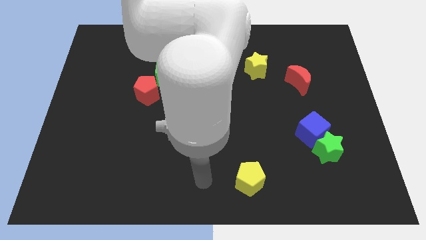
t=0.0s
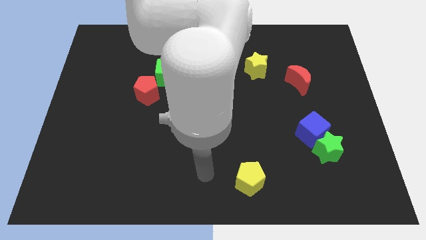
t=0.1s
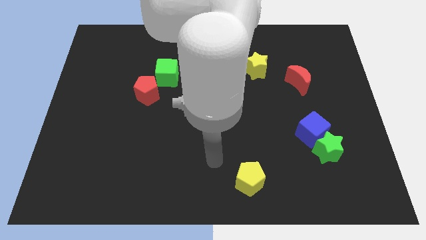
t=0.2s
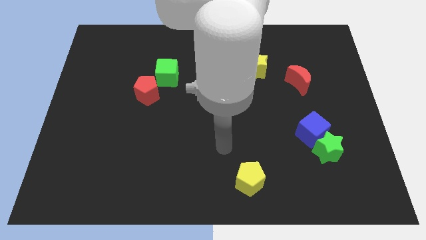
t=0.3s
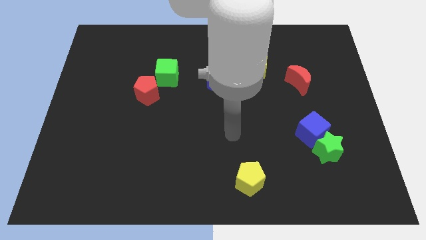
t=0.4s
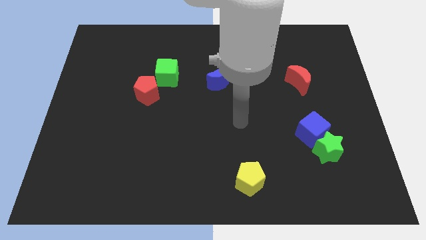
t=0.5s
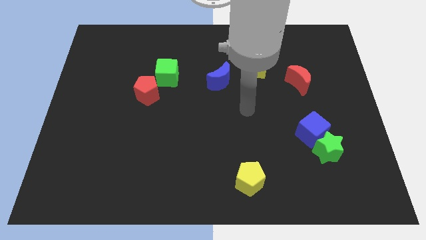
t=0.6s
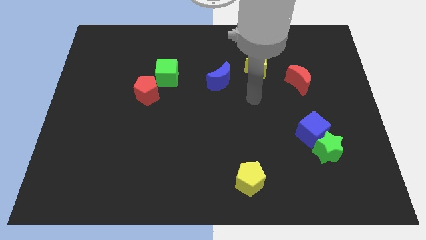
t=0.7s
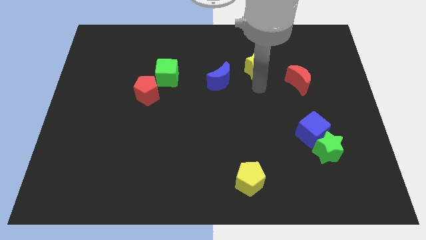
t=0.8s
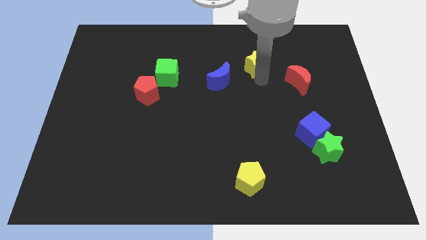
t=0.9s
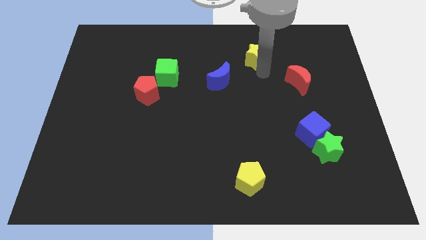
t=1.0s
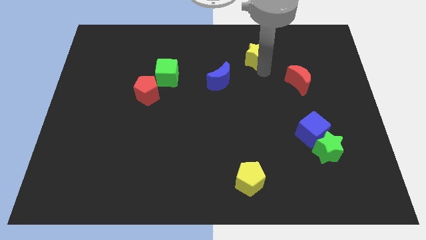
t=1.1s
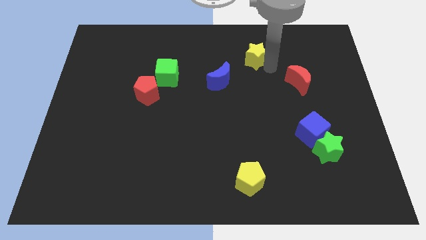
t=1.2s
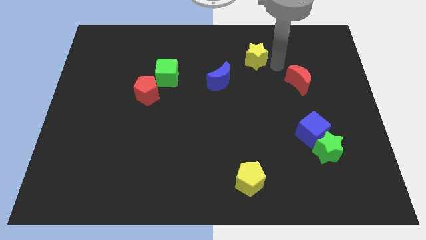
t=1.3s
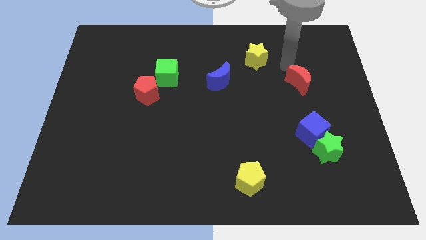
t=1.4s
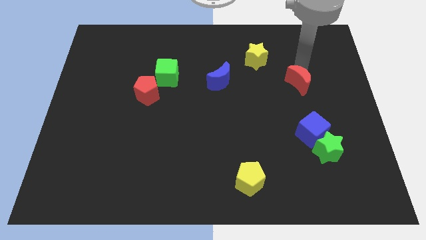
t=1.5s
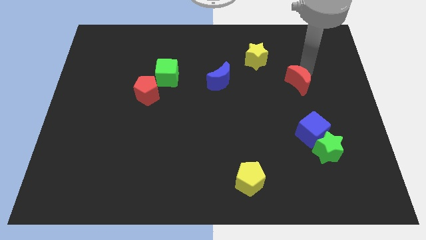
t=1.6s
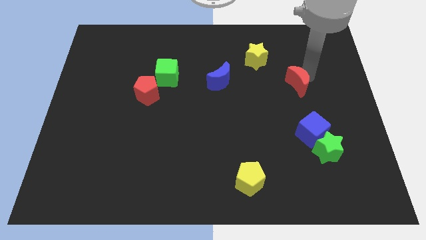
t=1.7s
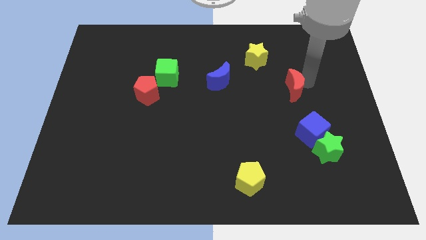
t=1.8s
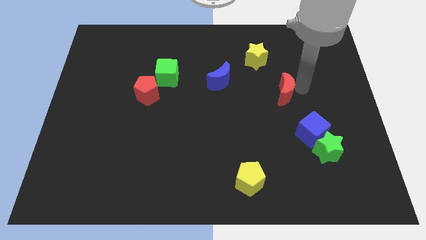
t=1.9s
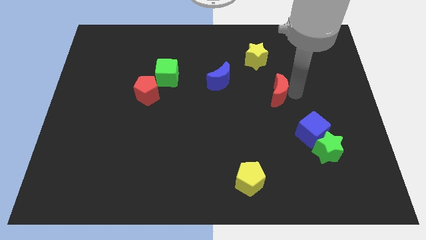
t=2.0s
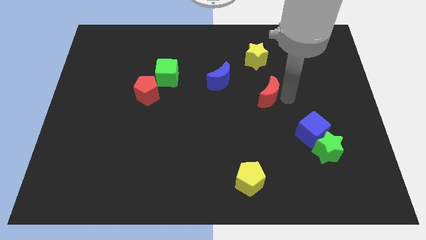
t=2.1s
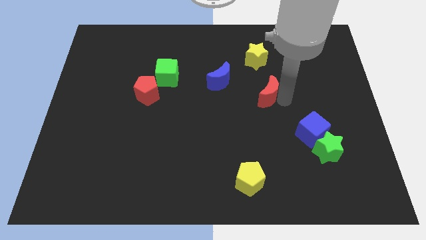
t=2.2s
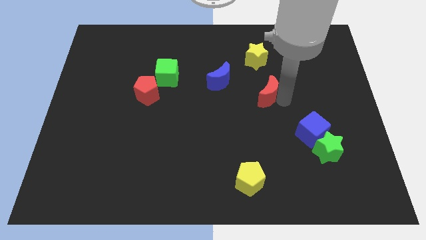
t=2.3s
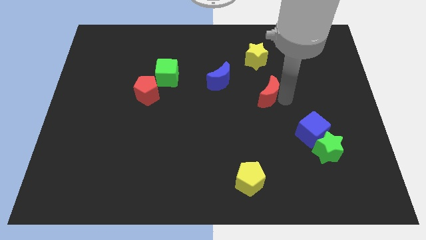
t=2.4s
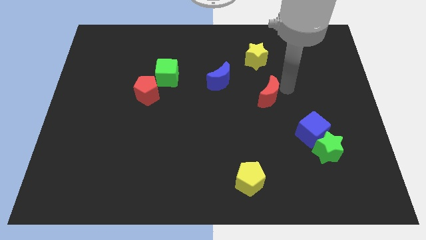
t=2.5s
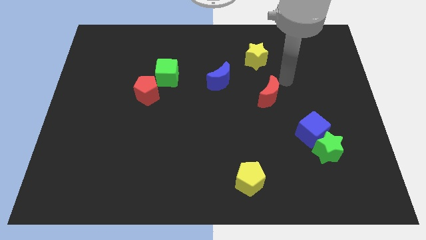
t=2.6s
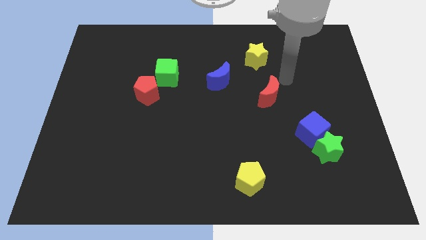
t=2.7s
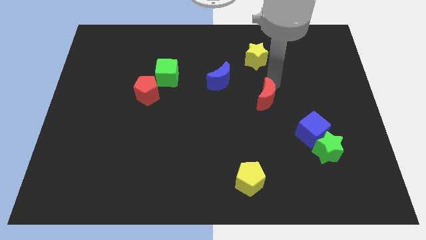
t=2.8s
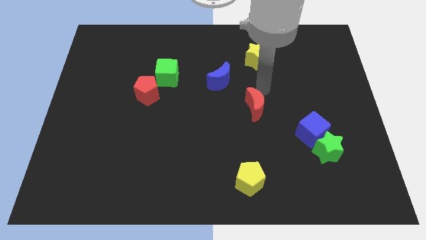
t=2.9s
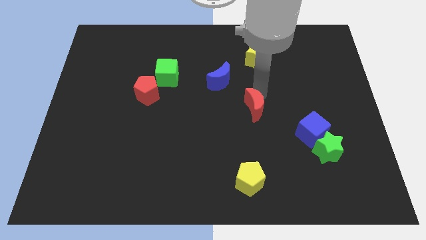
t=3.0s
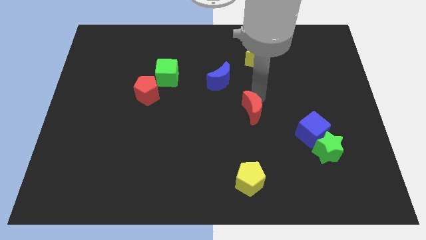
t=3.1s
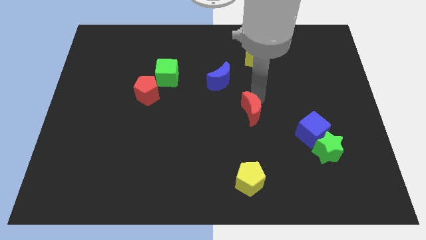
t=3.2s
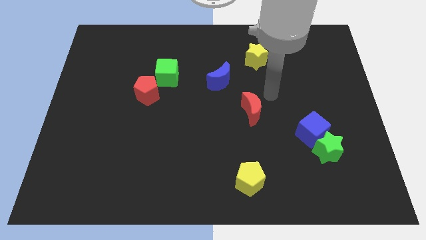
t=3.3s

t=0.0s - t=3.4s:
put the red crescent between the yellow star and yellow pentagon

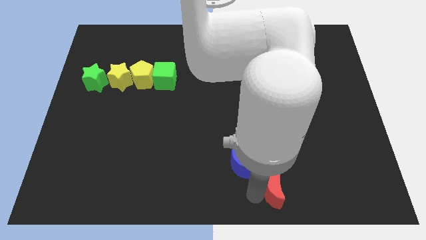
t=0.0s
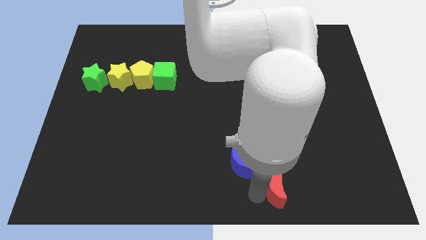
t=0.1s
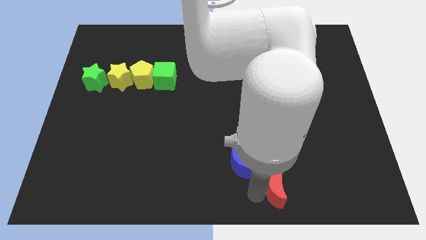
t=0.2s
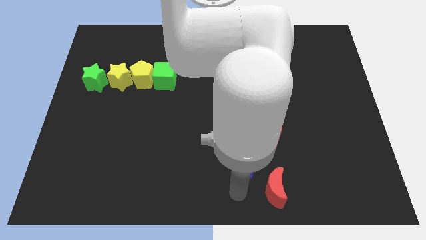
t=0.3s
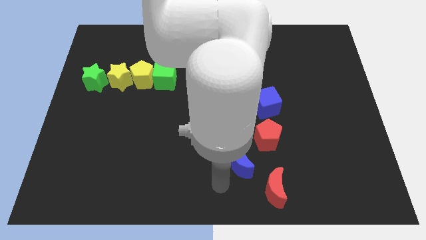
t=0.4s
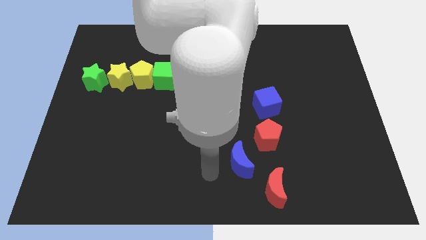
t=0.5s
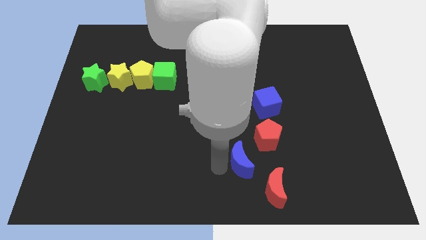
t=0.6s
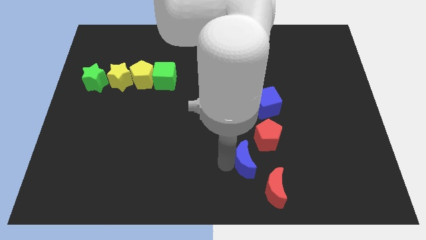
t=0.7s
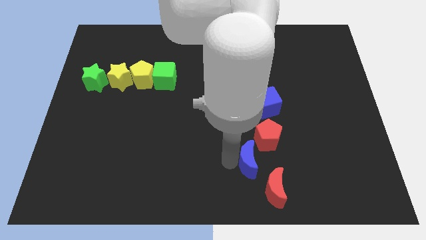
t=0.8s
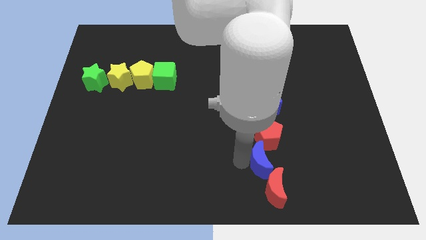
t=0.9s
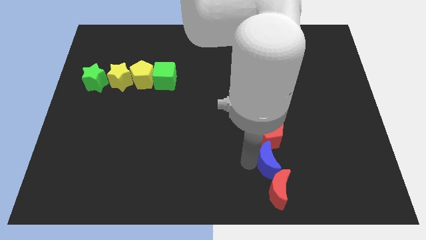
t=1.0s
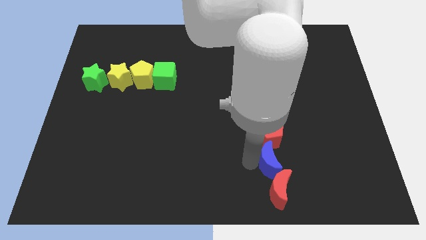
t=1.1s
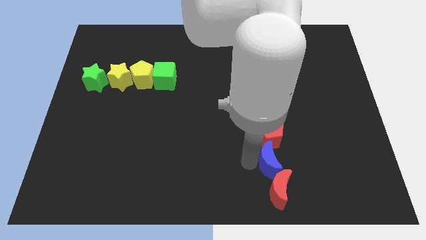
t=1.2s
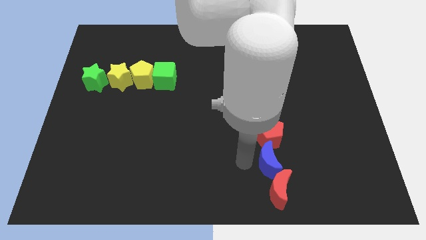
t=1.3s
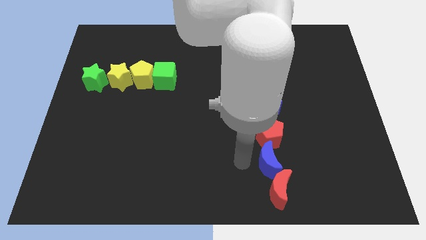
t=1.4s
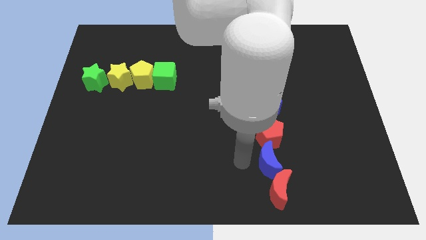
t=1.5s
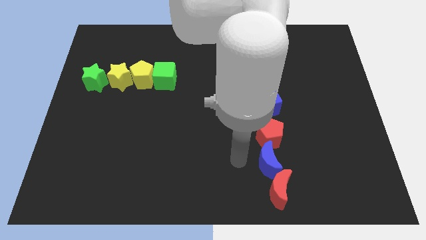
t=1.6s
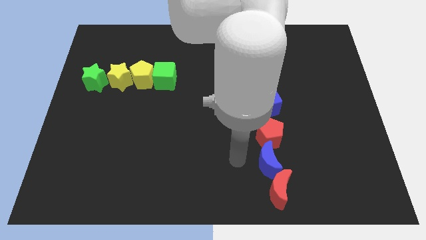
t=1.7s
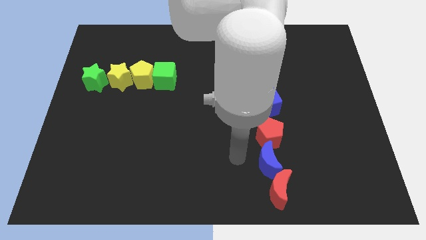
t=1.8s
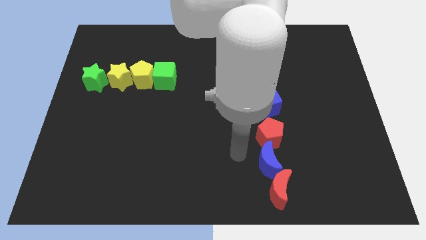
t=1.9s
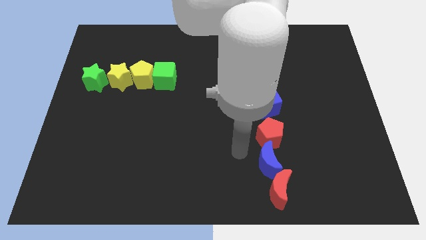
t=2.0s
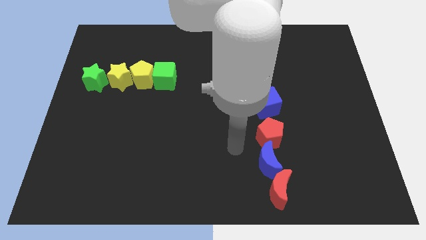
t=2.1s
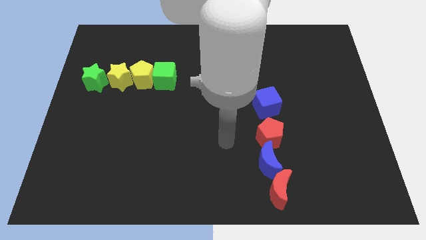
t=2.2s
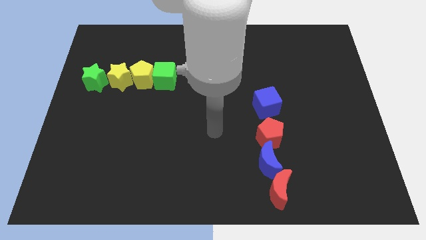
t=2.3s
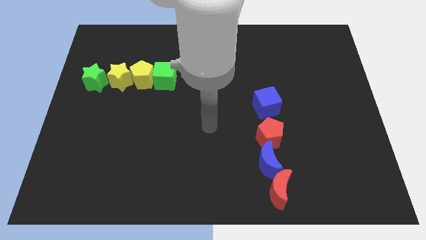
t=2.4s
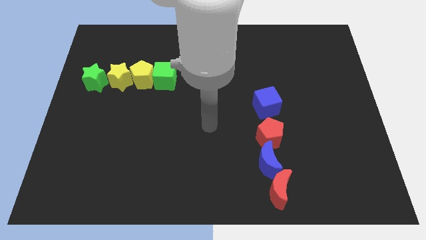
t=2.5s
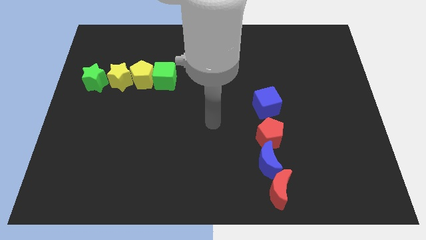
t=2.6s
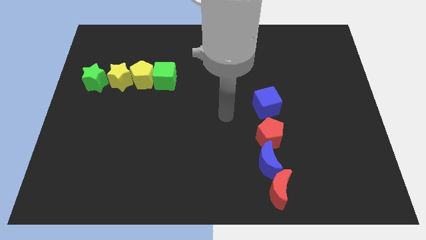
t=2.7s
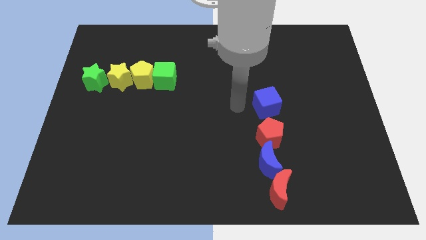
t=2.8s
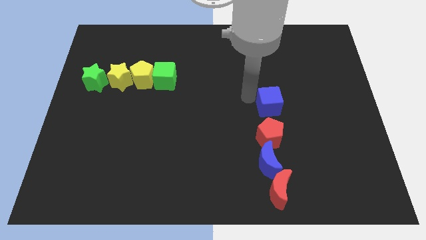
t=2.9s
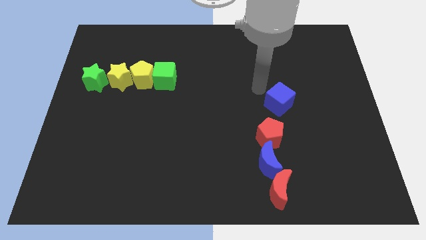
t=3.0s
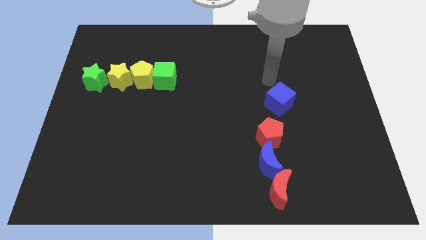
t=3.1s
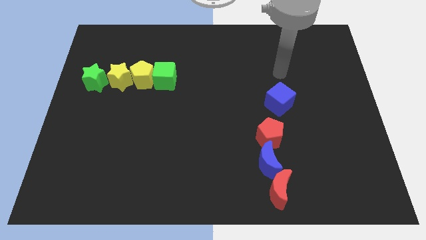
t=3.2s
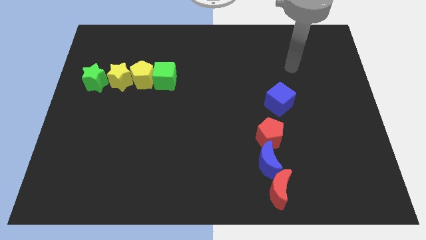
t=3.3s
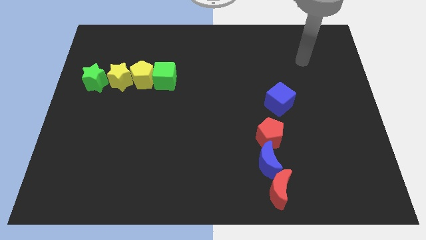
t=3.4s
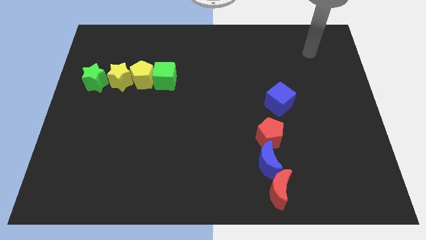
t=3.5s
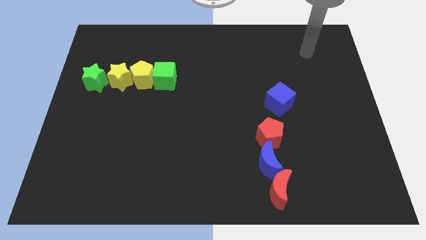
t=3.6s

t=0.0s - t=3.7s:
adjust the blue and red blocks to form a vertical line

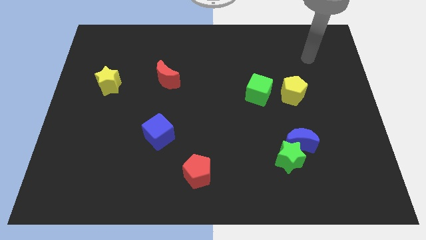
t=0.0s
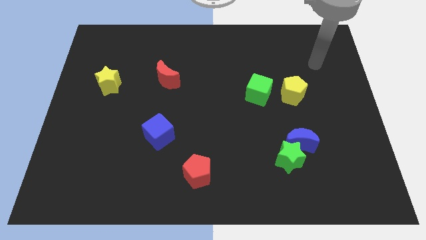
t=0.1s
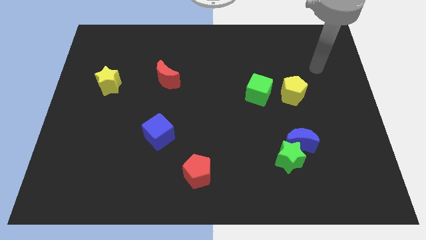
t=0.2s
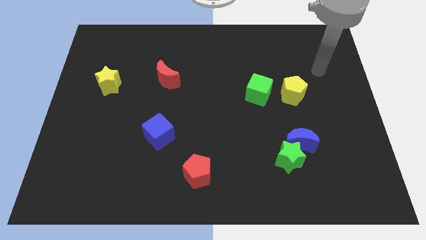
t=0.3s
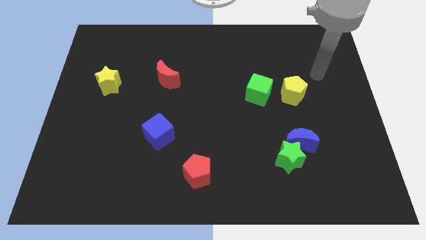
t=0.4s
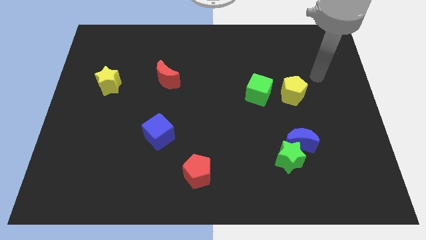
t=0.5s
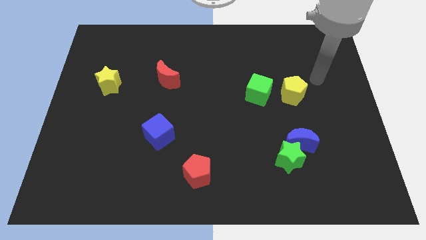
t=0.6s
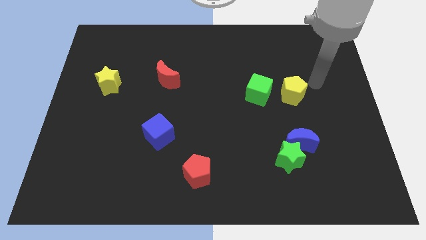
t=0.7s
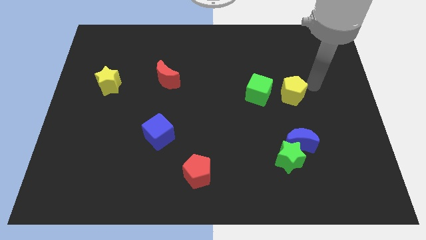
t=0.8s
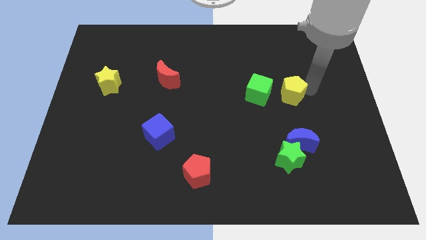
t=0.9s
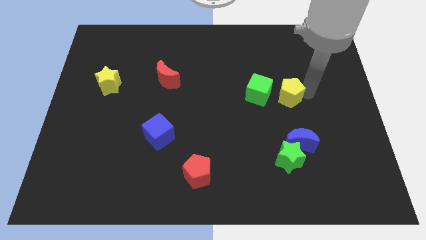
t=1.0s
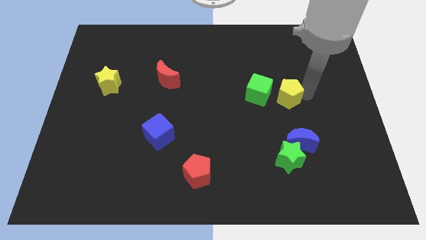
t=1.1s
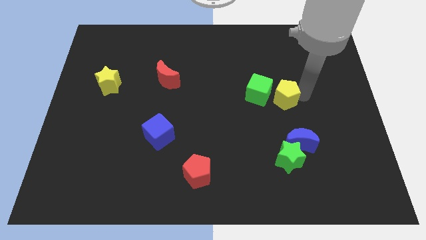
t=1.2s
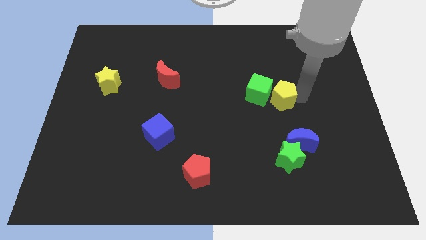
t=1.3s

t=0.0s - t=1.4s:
push the yellow pentagon slightly to the left

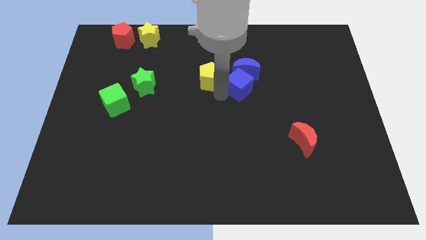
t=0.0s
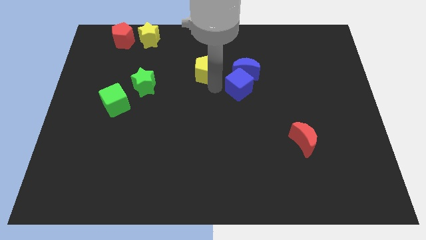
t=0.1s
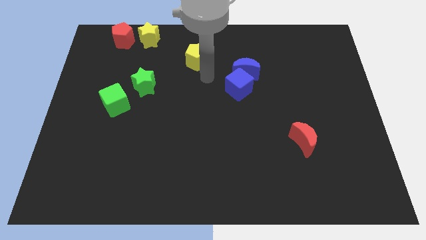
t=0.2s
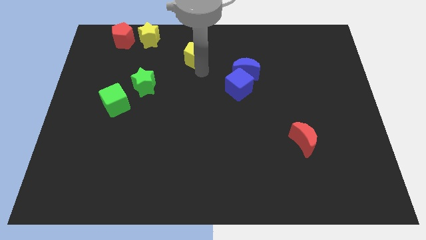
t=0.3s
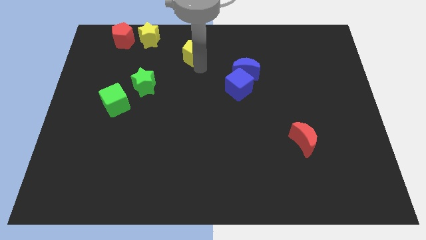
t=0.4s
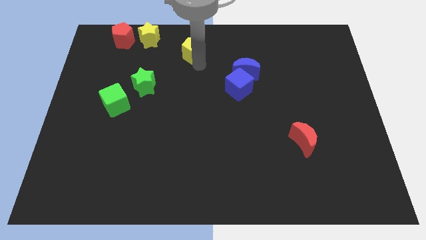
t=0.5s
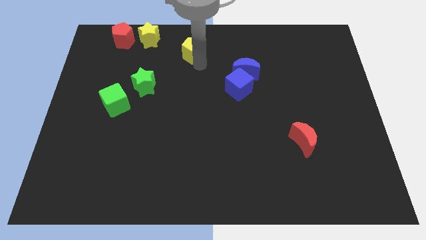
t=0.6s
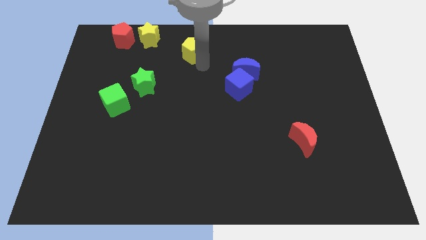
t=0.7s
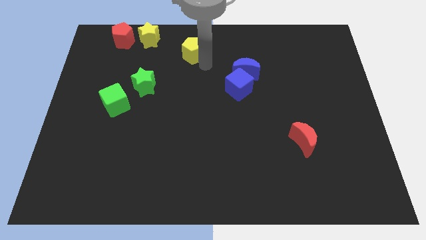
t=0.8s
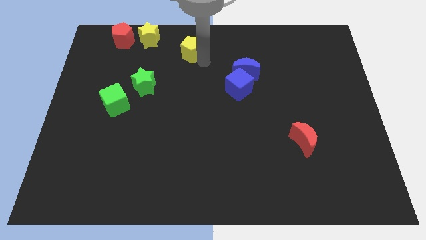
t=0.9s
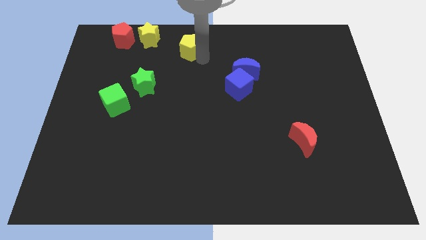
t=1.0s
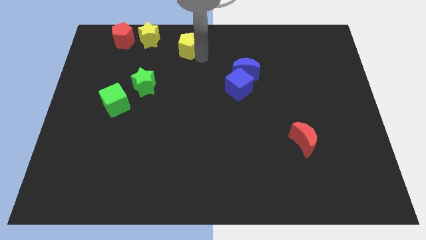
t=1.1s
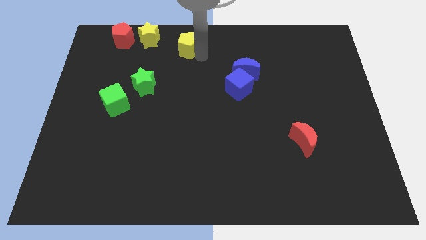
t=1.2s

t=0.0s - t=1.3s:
move the yellow pentagon right beside the yellow star
